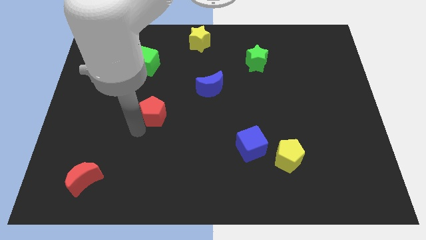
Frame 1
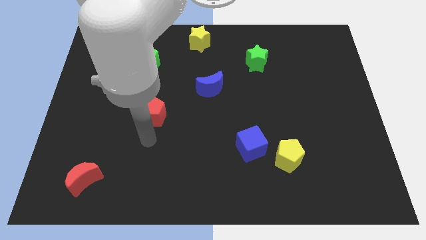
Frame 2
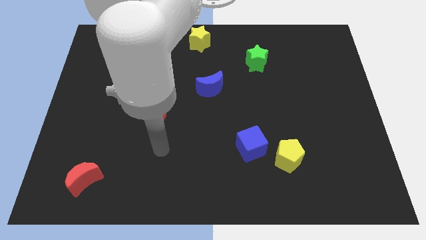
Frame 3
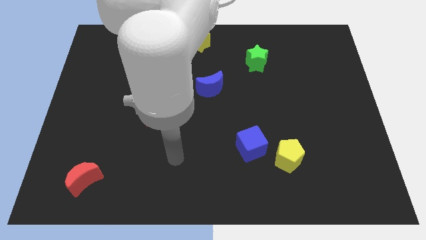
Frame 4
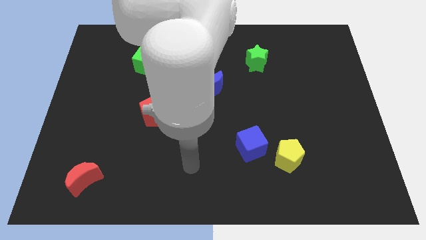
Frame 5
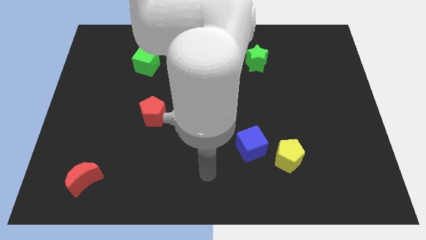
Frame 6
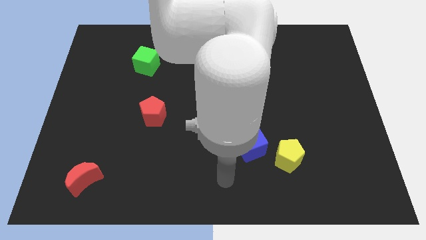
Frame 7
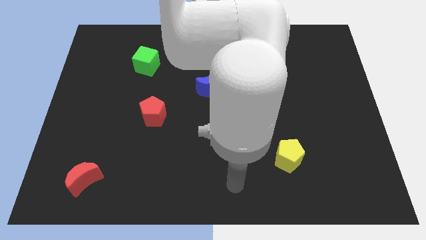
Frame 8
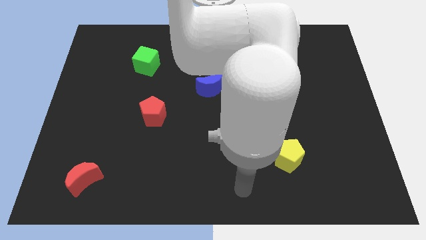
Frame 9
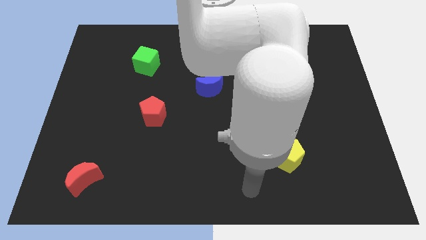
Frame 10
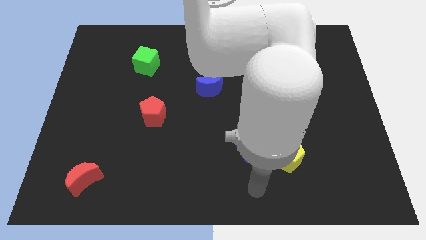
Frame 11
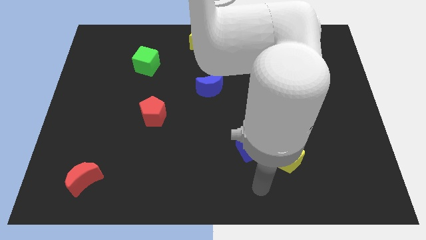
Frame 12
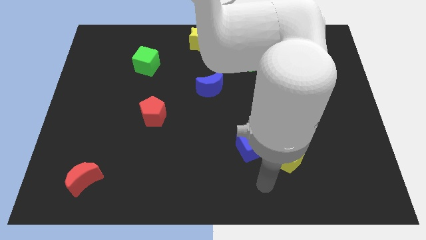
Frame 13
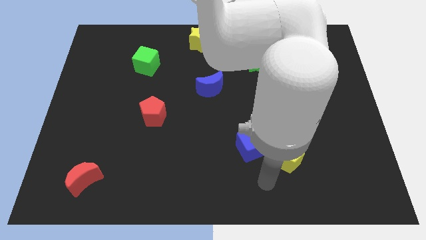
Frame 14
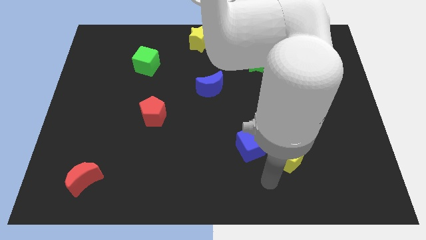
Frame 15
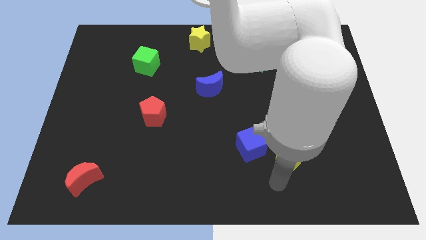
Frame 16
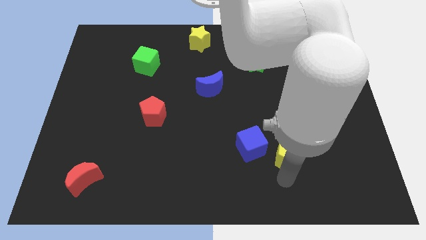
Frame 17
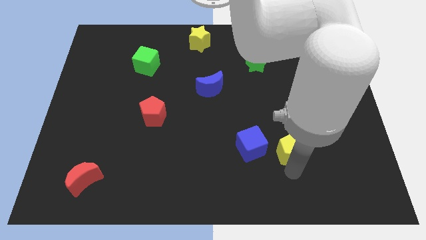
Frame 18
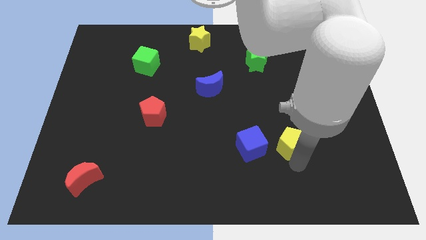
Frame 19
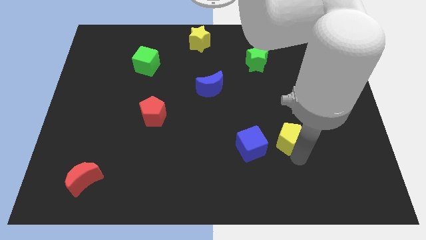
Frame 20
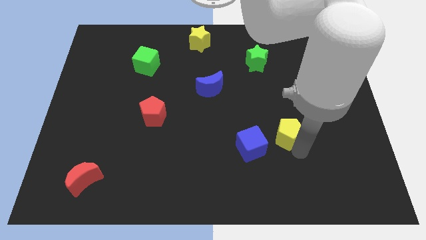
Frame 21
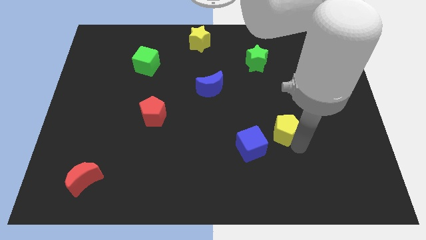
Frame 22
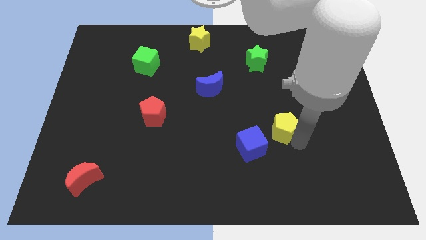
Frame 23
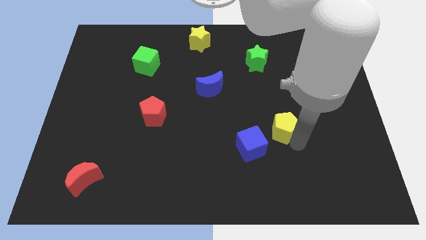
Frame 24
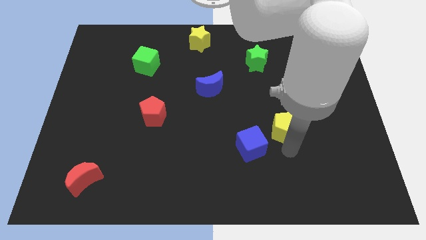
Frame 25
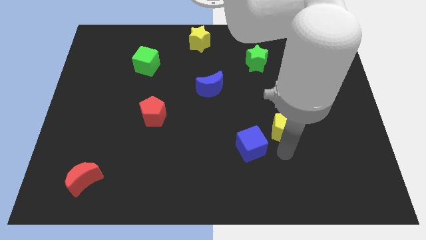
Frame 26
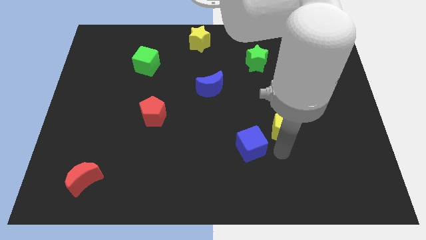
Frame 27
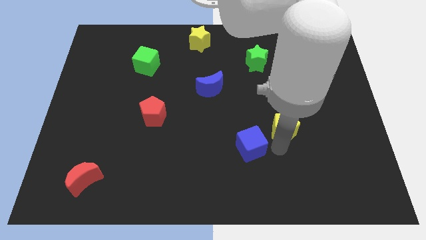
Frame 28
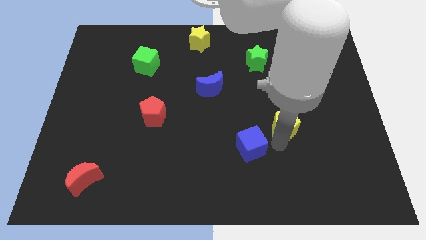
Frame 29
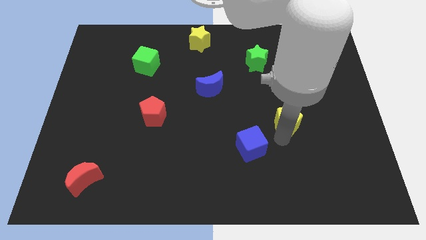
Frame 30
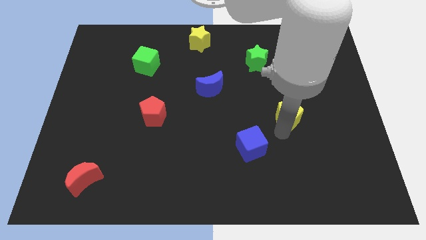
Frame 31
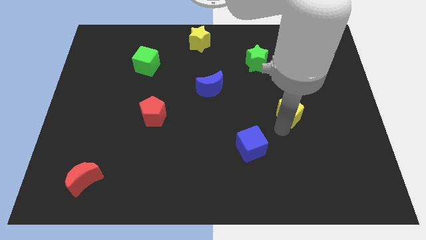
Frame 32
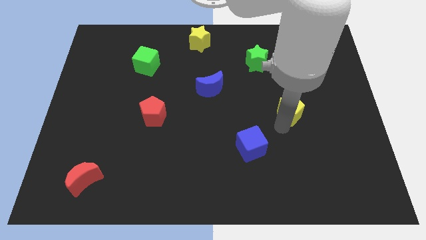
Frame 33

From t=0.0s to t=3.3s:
separate yellow pentagon from blue cube

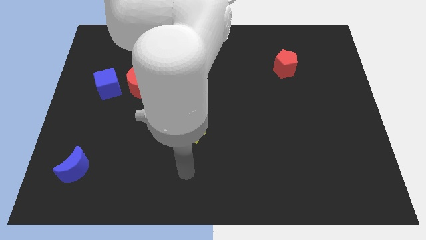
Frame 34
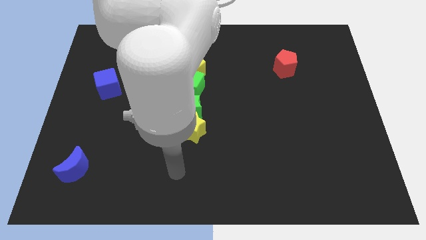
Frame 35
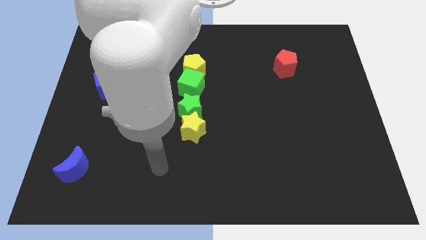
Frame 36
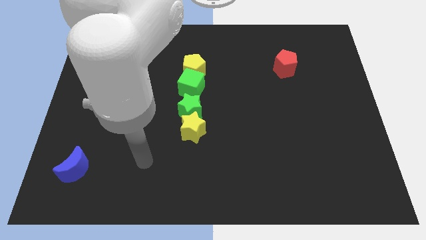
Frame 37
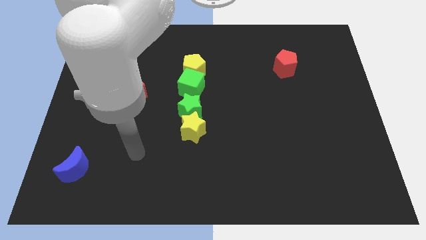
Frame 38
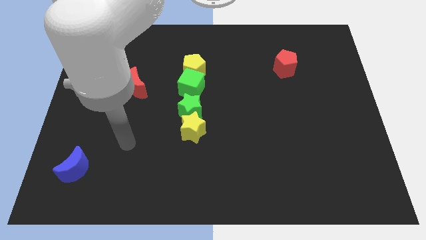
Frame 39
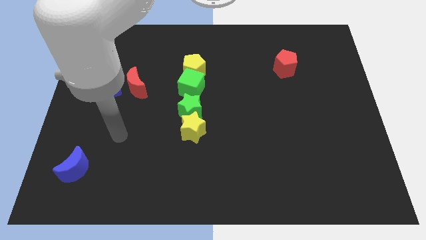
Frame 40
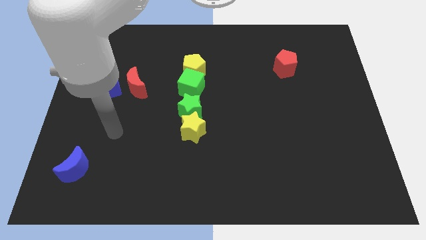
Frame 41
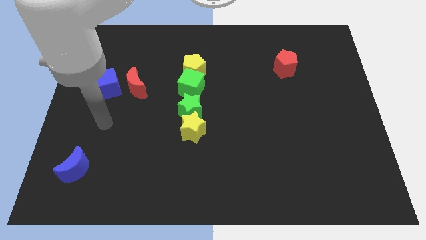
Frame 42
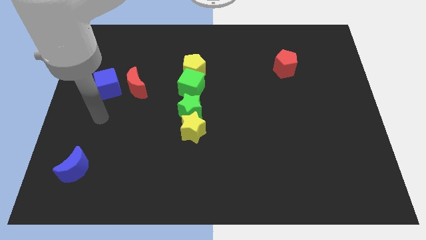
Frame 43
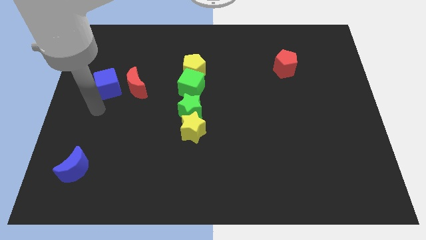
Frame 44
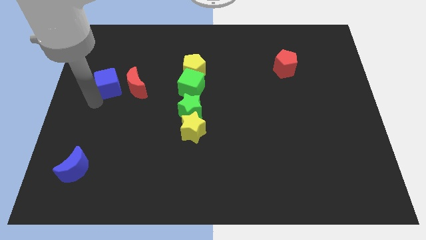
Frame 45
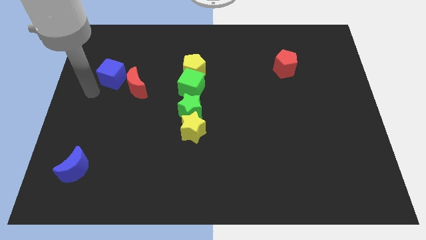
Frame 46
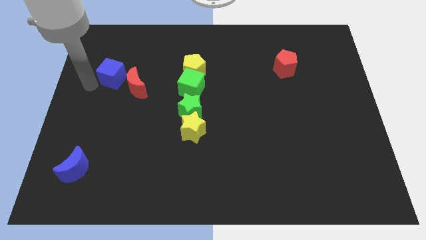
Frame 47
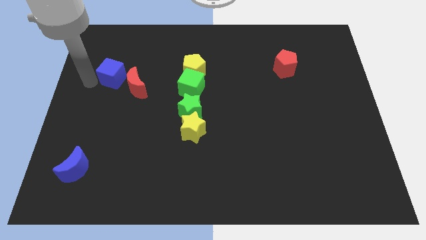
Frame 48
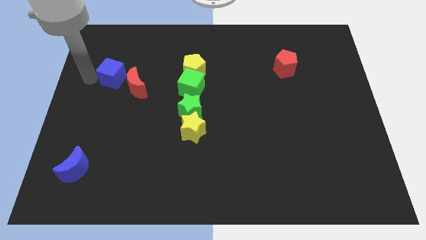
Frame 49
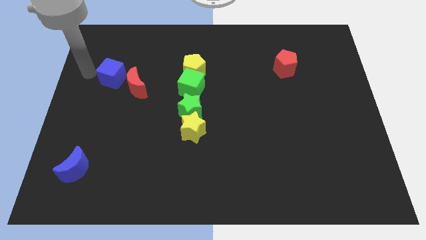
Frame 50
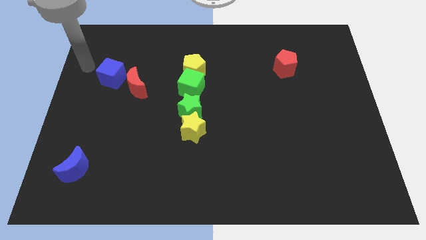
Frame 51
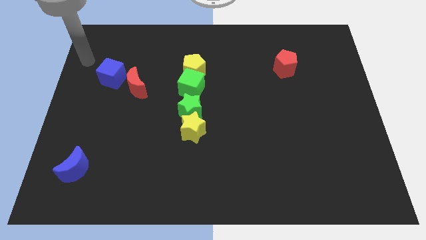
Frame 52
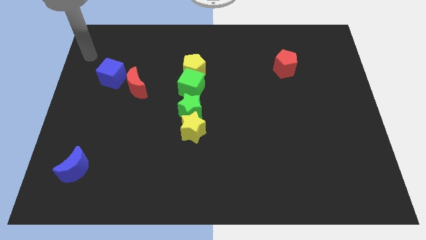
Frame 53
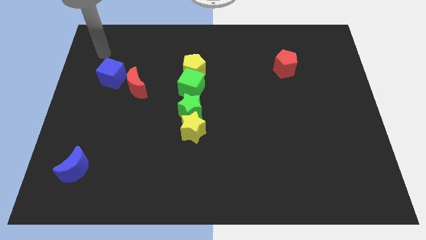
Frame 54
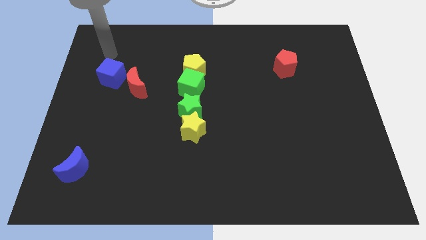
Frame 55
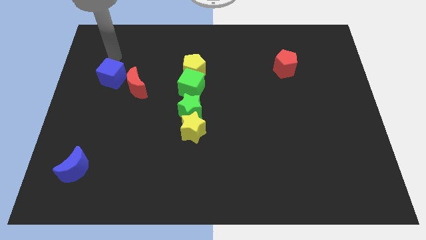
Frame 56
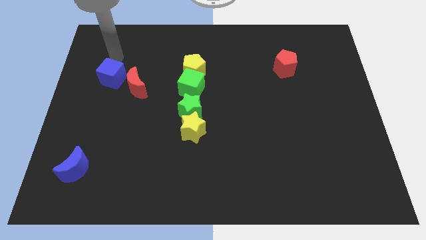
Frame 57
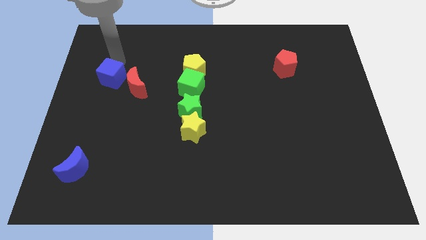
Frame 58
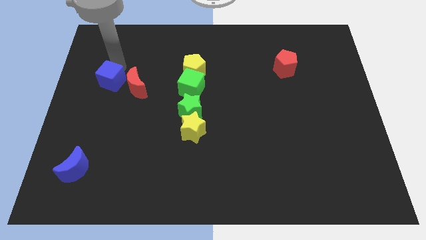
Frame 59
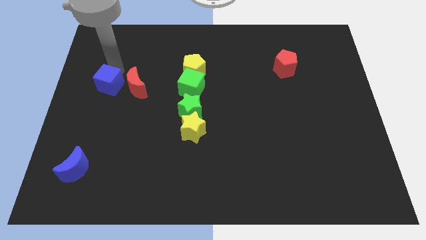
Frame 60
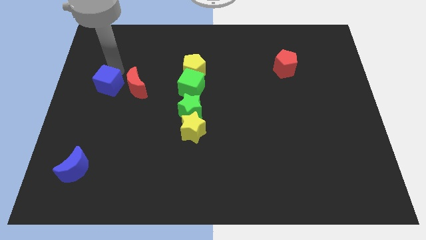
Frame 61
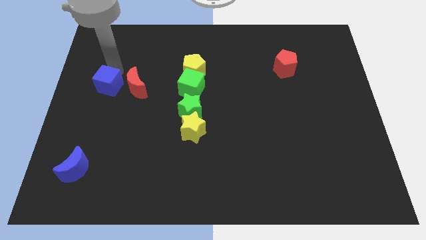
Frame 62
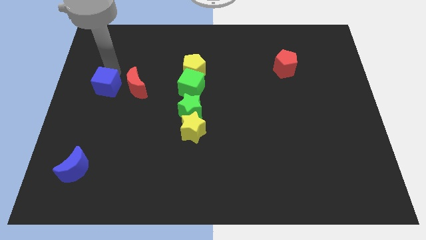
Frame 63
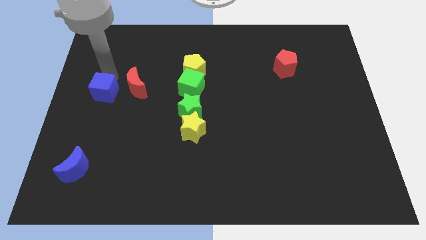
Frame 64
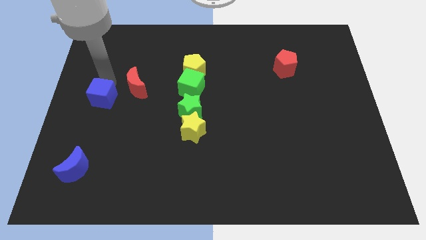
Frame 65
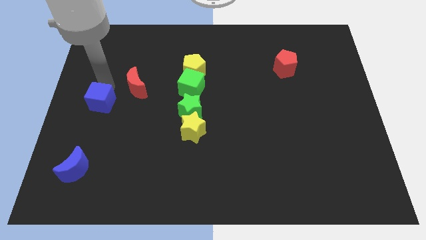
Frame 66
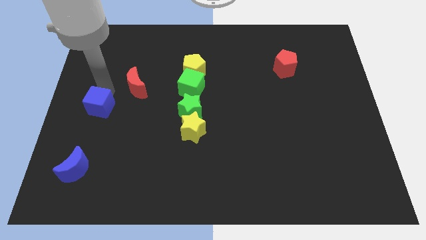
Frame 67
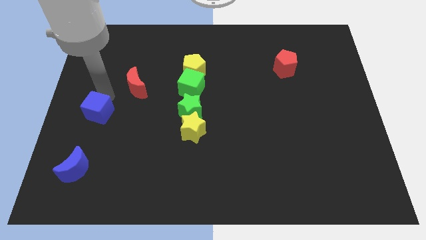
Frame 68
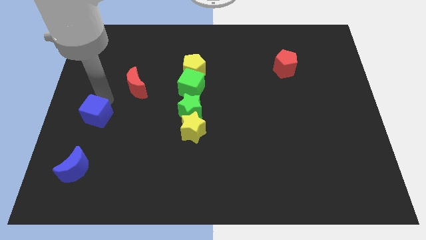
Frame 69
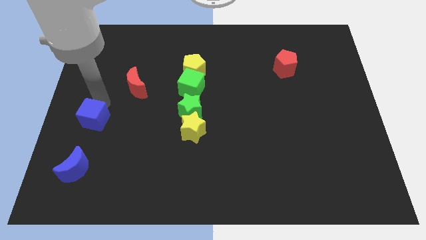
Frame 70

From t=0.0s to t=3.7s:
place the blue cube in between the blue moon and the red moon

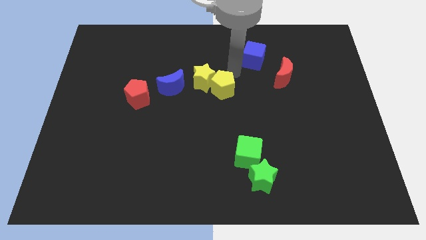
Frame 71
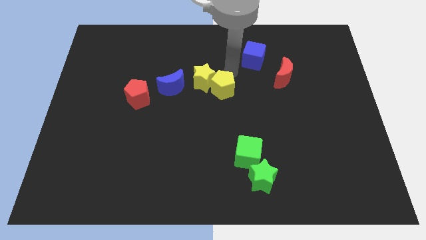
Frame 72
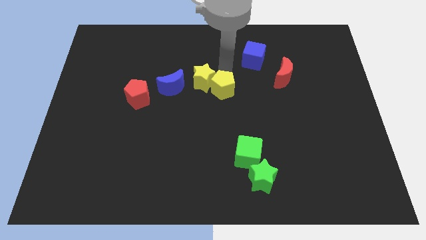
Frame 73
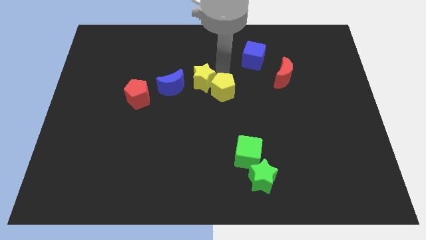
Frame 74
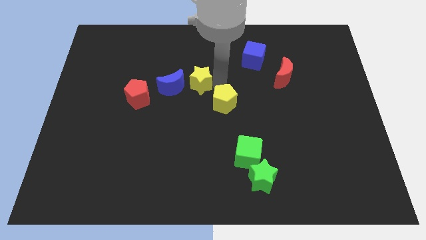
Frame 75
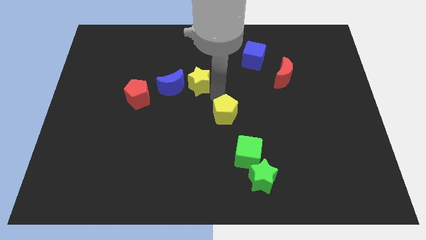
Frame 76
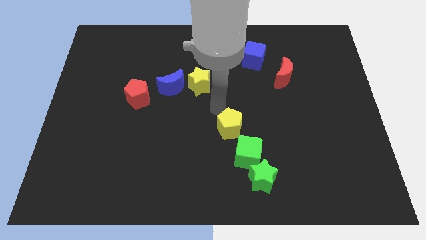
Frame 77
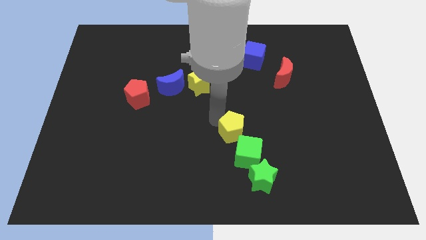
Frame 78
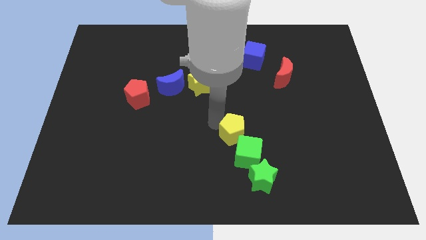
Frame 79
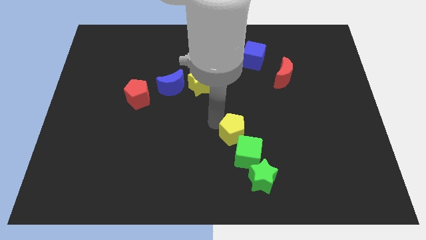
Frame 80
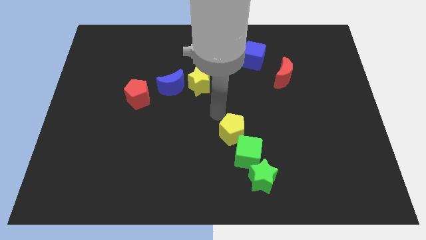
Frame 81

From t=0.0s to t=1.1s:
place the yellow pentagon above the green cube

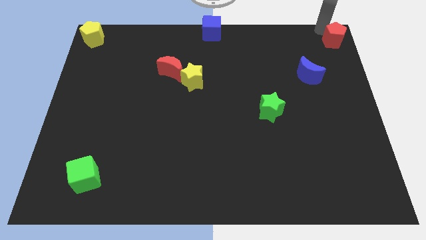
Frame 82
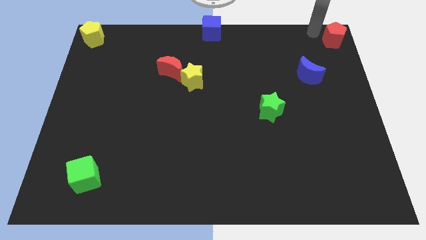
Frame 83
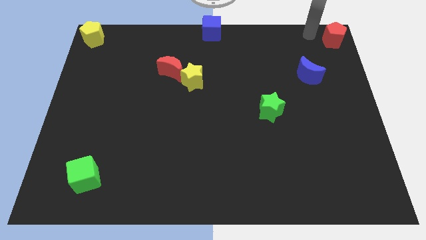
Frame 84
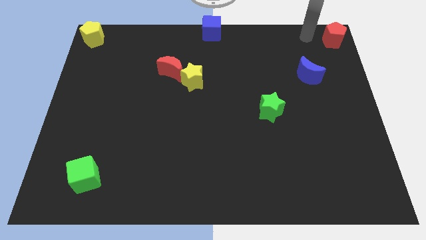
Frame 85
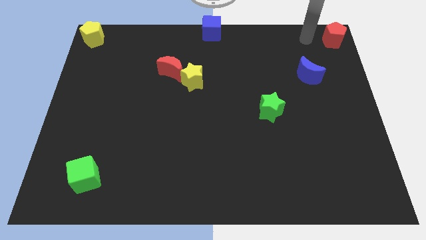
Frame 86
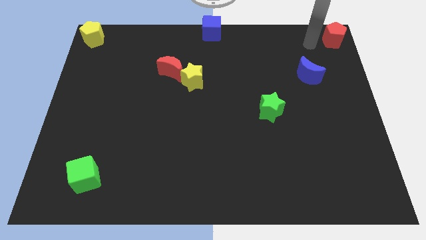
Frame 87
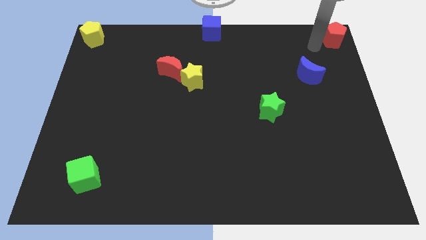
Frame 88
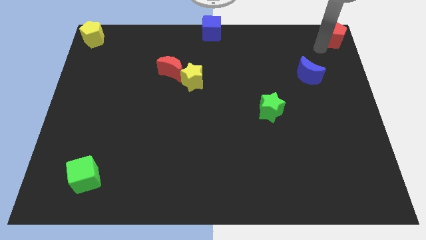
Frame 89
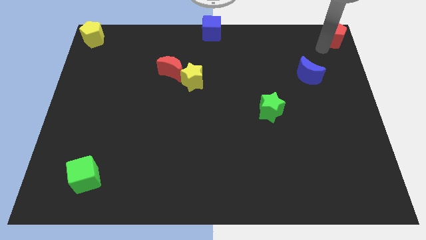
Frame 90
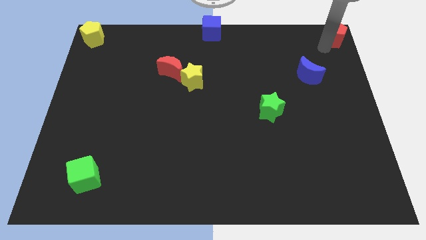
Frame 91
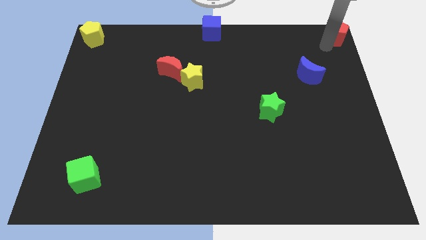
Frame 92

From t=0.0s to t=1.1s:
move red pentagon to the top right corner
